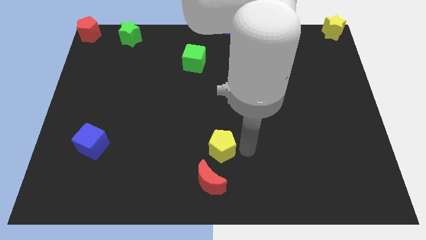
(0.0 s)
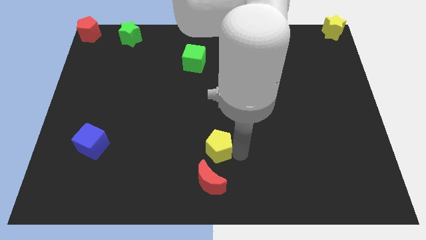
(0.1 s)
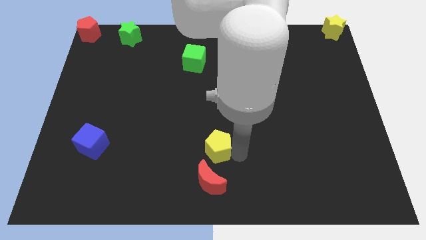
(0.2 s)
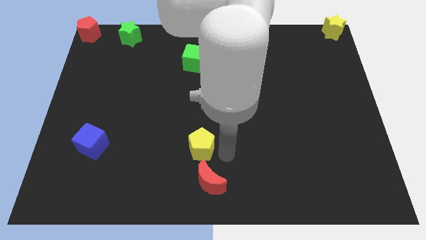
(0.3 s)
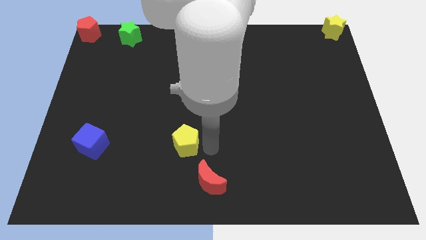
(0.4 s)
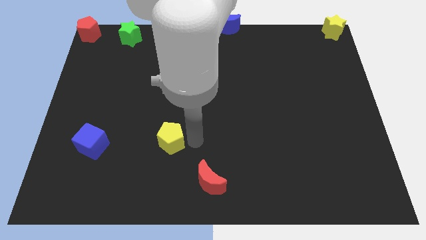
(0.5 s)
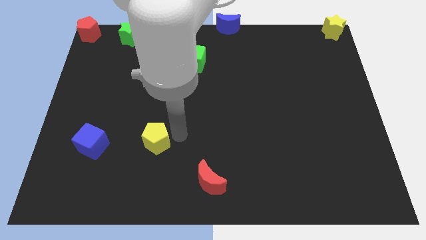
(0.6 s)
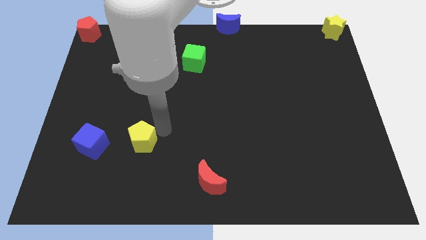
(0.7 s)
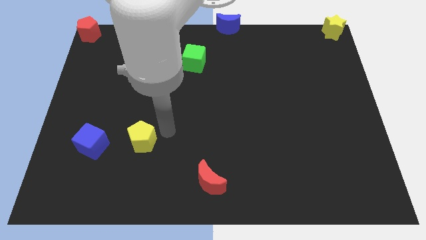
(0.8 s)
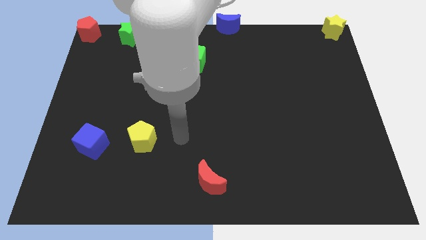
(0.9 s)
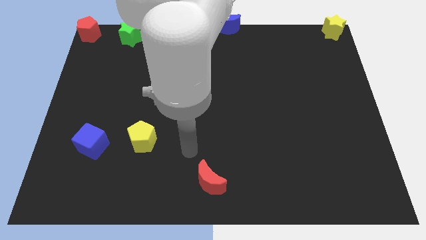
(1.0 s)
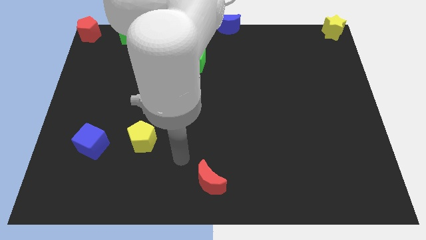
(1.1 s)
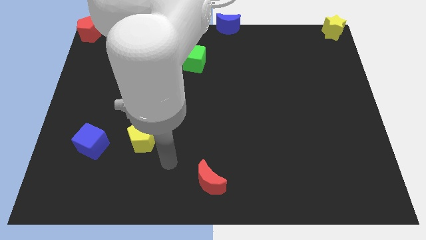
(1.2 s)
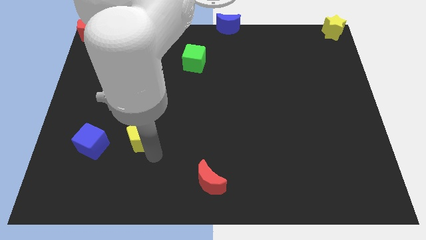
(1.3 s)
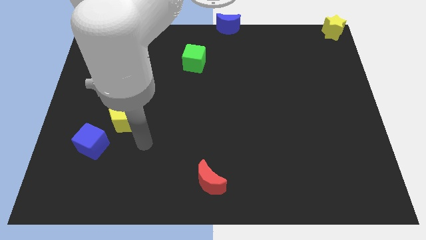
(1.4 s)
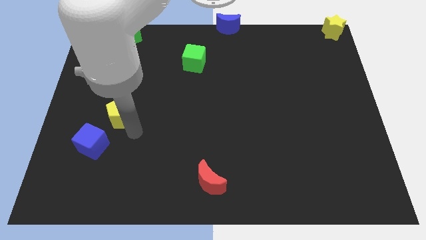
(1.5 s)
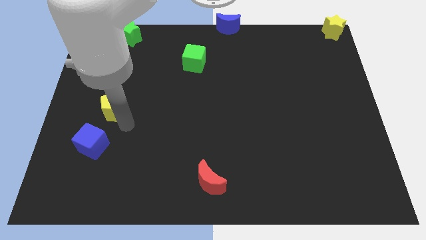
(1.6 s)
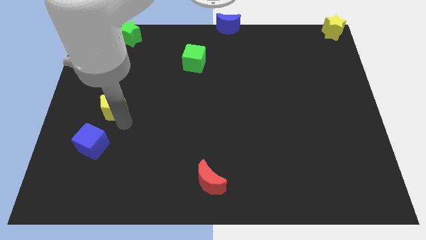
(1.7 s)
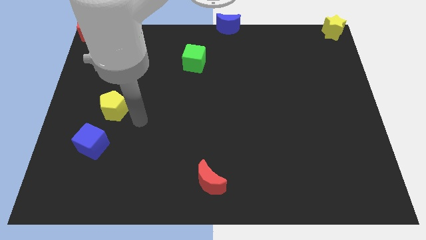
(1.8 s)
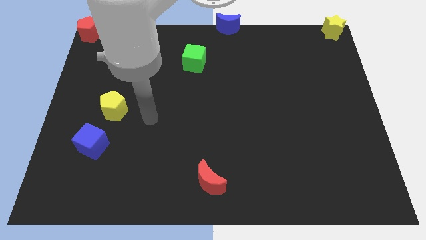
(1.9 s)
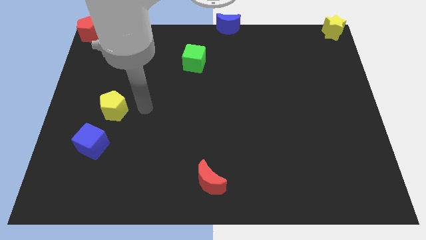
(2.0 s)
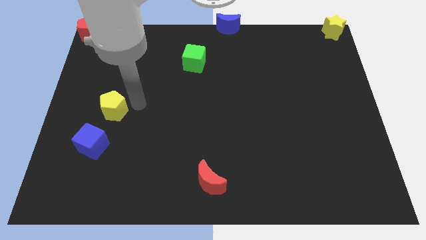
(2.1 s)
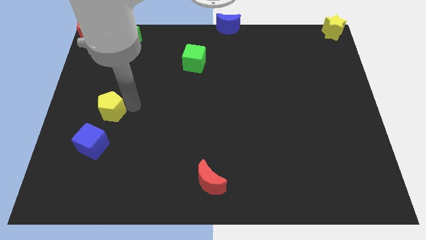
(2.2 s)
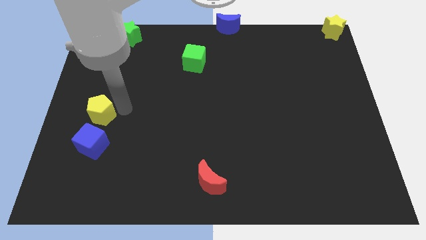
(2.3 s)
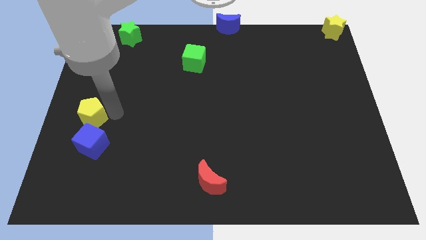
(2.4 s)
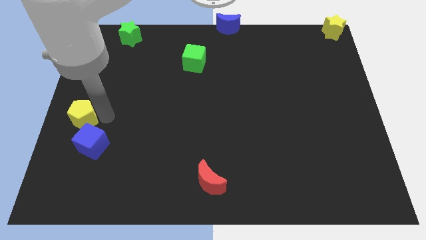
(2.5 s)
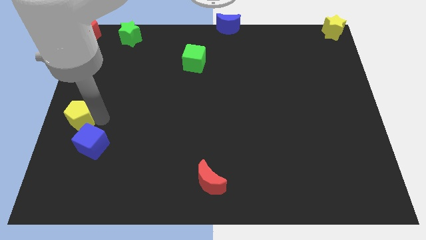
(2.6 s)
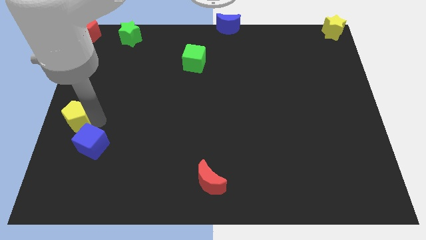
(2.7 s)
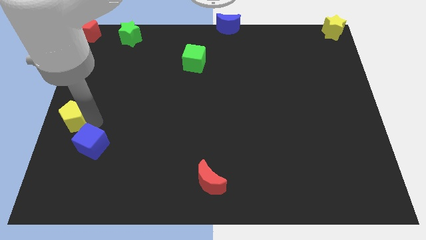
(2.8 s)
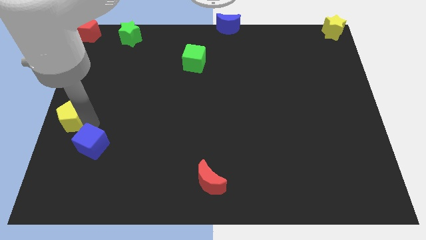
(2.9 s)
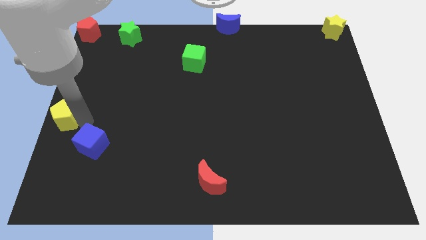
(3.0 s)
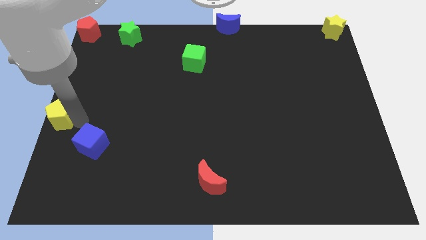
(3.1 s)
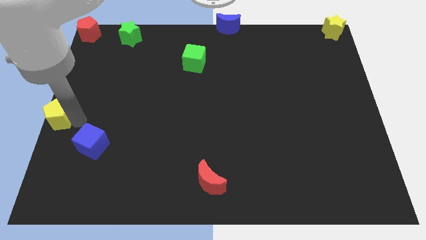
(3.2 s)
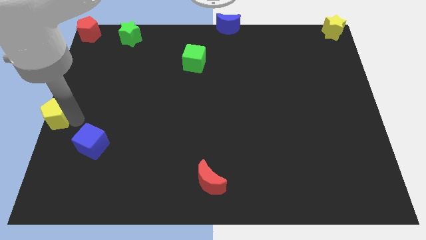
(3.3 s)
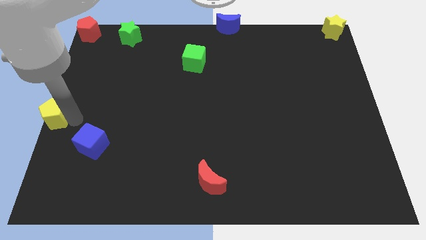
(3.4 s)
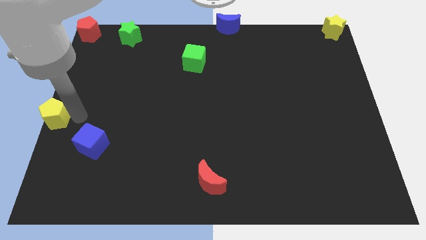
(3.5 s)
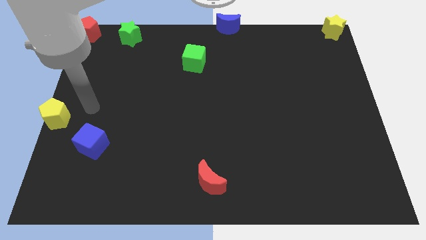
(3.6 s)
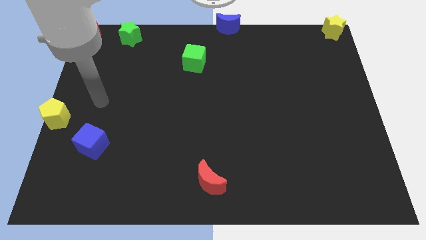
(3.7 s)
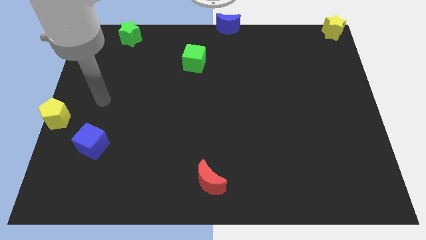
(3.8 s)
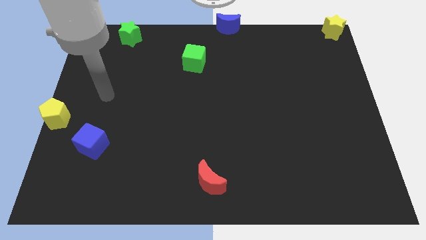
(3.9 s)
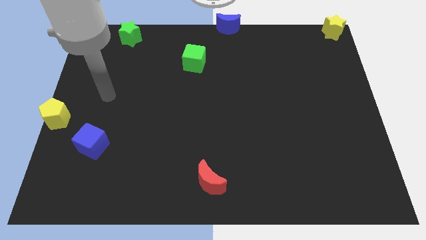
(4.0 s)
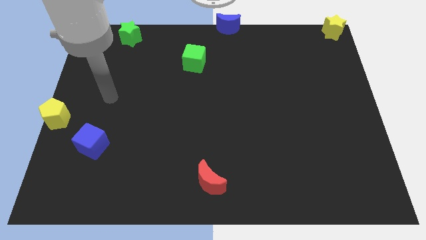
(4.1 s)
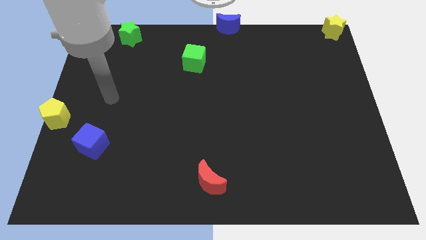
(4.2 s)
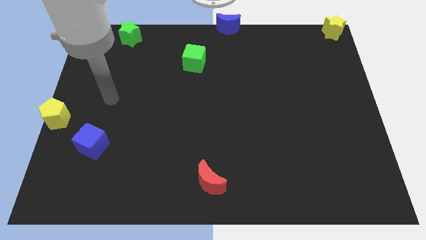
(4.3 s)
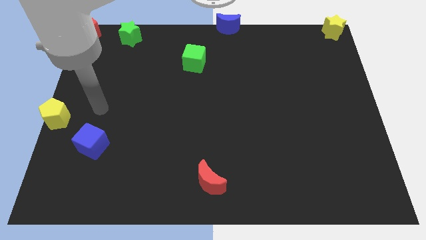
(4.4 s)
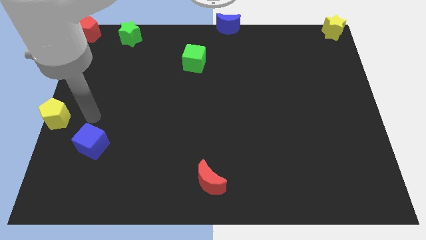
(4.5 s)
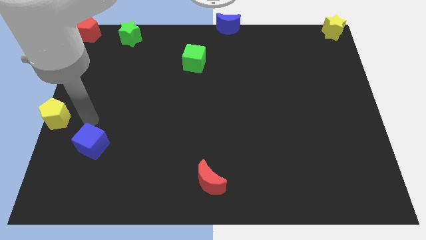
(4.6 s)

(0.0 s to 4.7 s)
place the yellow pentagon vertically below the red pentagon

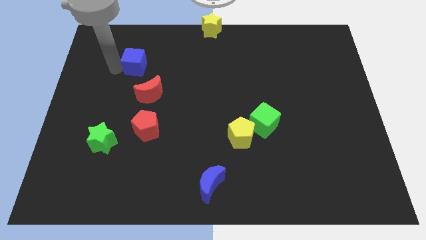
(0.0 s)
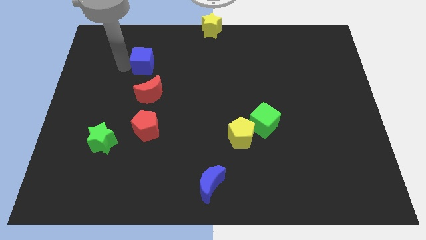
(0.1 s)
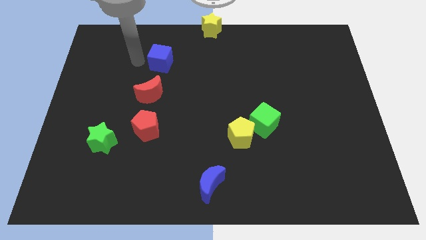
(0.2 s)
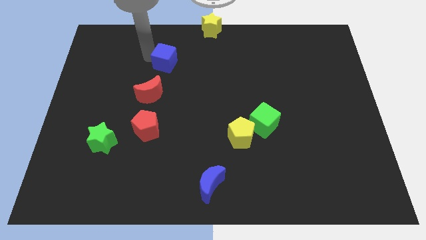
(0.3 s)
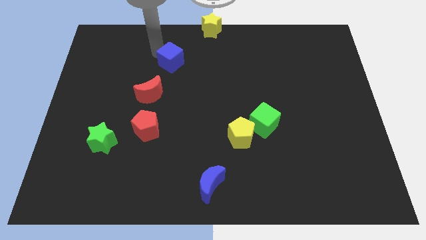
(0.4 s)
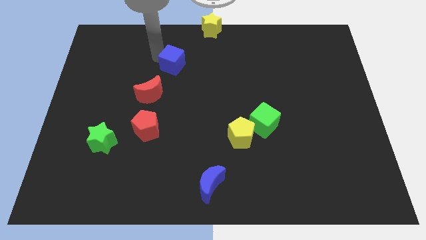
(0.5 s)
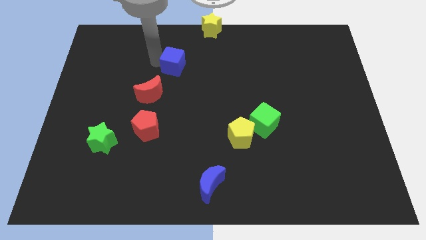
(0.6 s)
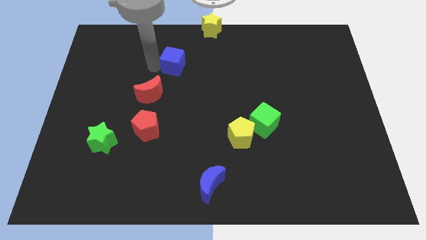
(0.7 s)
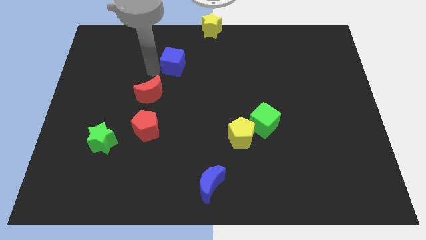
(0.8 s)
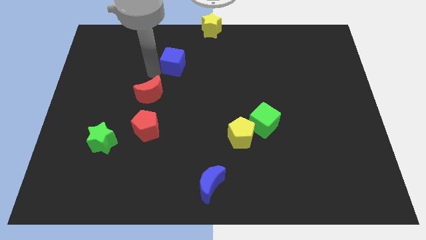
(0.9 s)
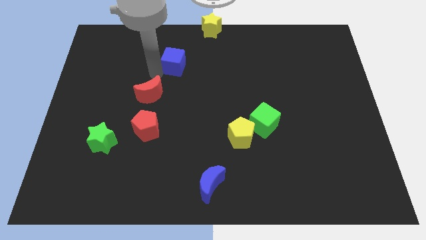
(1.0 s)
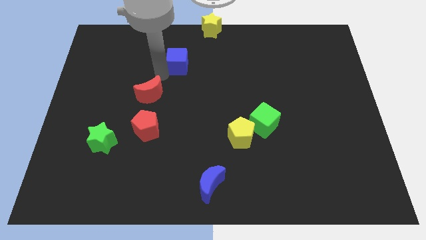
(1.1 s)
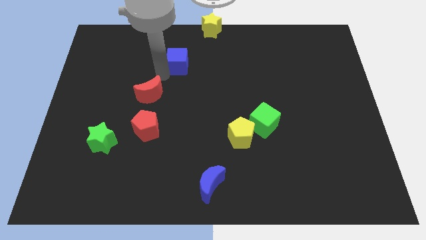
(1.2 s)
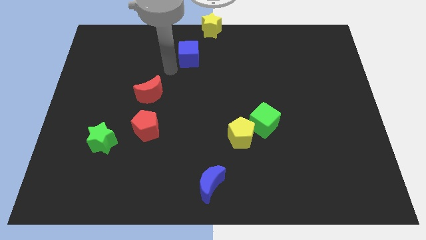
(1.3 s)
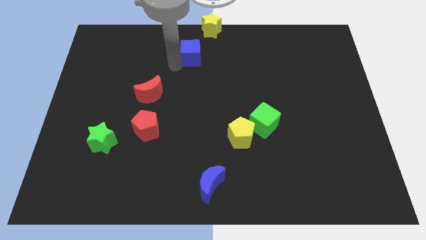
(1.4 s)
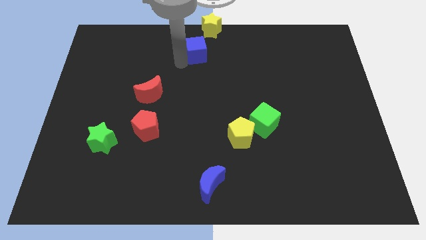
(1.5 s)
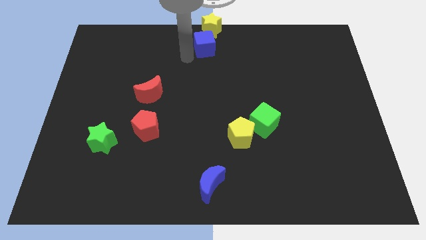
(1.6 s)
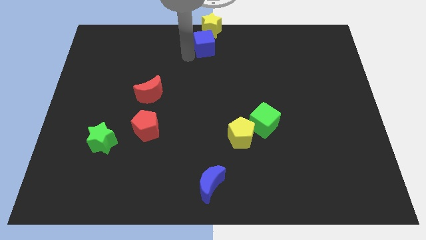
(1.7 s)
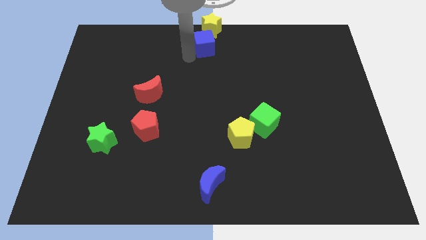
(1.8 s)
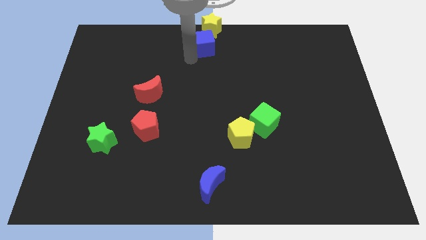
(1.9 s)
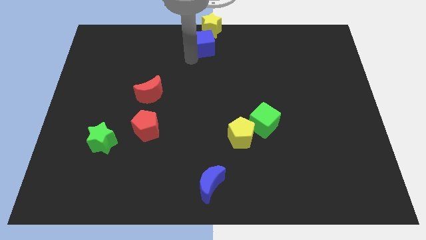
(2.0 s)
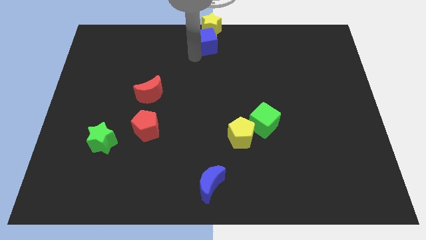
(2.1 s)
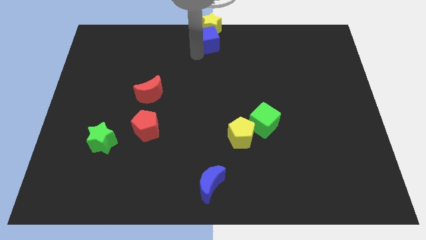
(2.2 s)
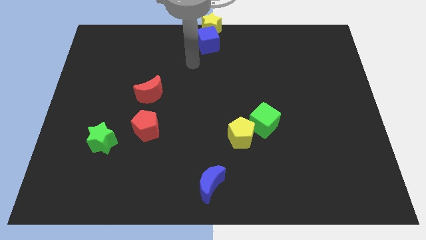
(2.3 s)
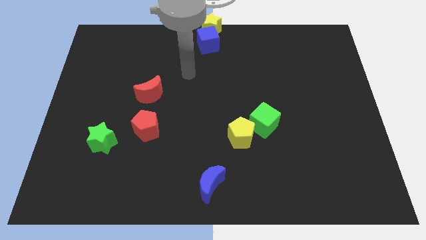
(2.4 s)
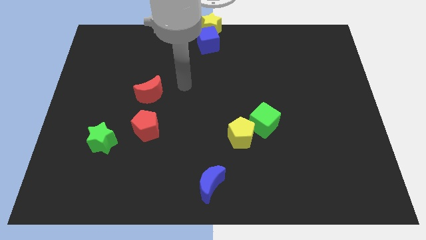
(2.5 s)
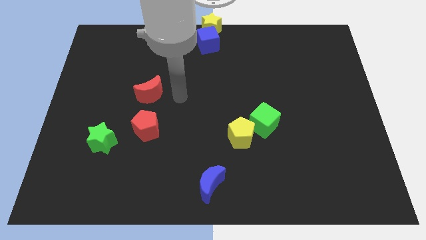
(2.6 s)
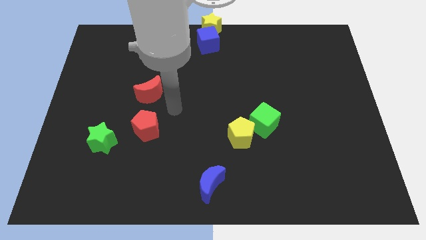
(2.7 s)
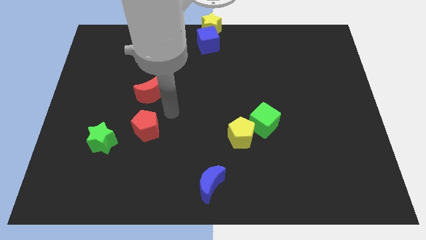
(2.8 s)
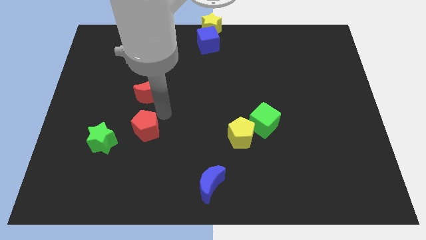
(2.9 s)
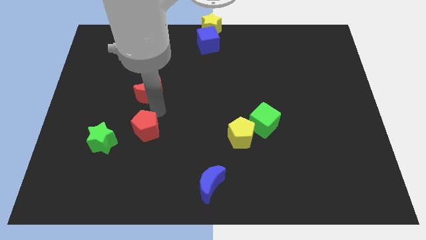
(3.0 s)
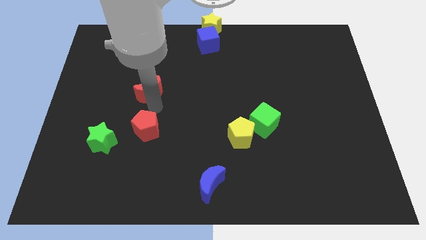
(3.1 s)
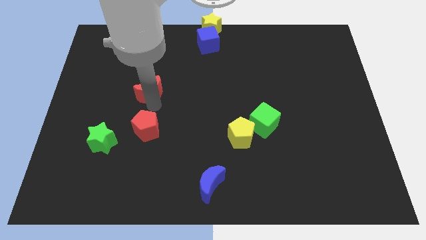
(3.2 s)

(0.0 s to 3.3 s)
place the arm down to the red moon

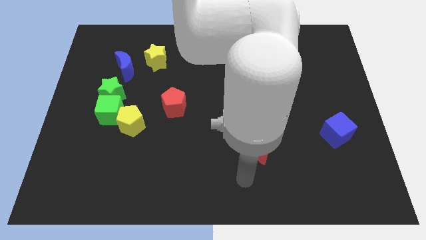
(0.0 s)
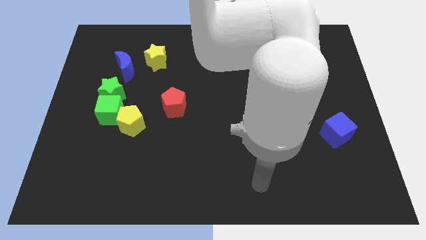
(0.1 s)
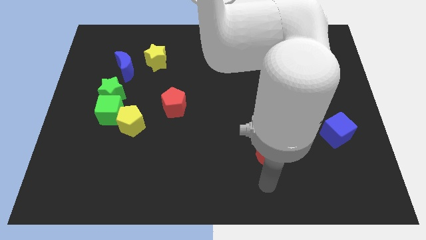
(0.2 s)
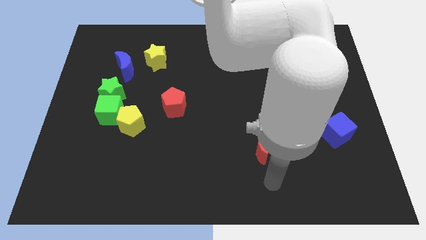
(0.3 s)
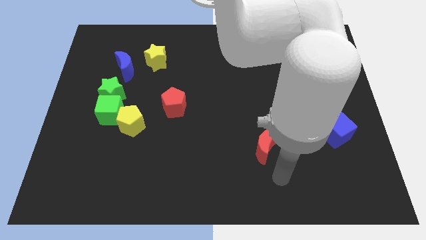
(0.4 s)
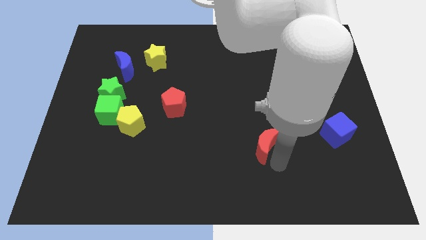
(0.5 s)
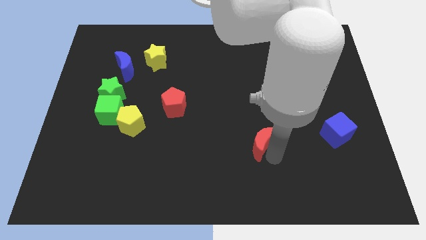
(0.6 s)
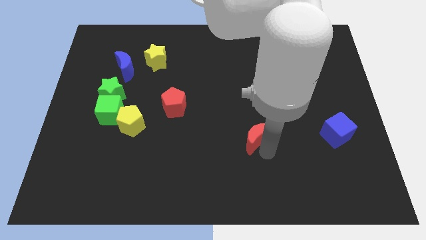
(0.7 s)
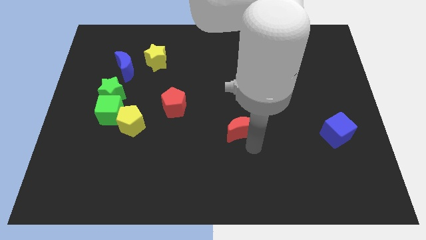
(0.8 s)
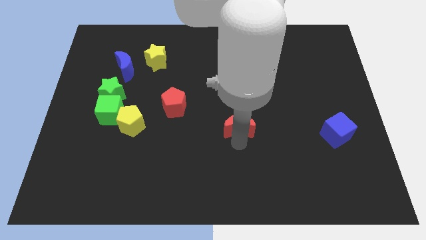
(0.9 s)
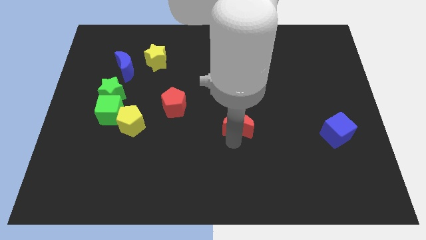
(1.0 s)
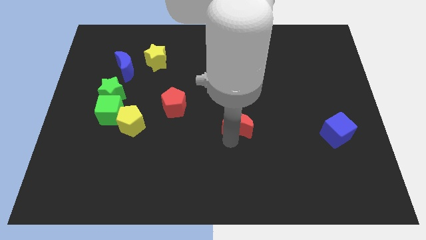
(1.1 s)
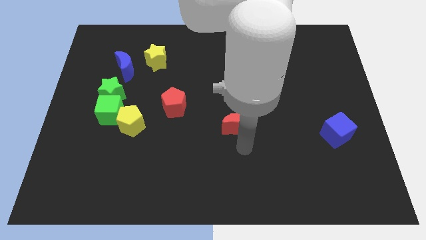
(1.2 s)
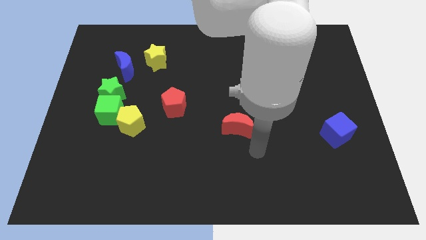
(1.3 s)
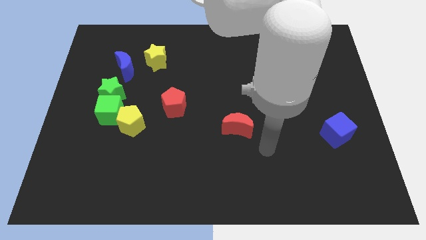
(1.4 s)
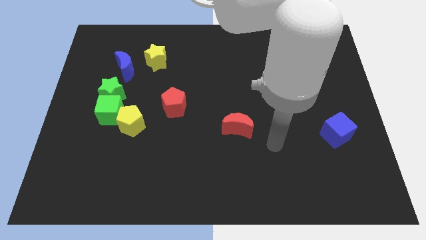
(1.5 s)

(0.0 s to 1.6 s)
place the red moon diagonally bottom right to the red pentagon
